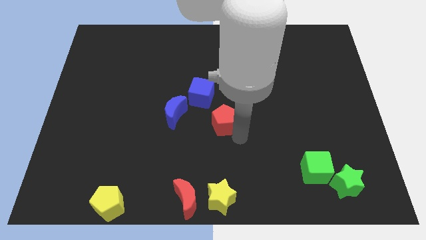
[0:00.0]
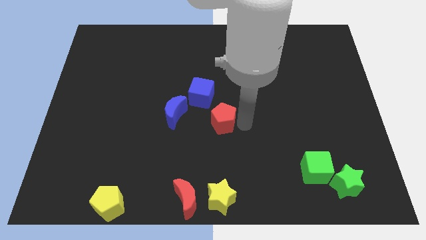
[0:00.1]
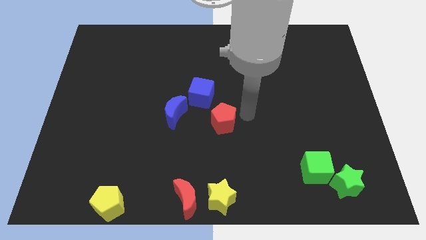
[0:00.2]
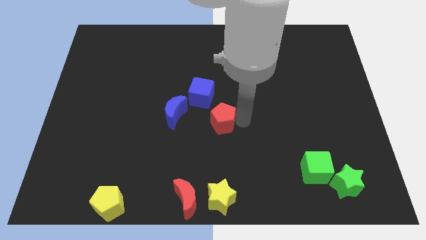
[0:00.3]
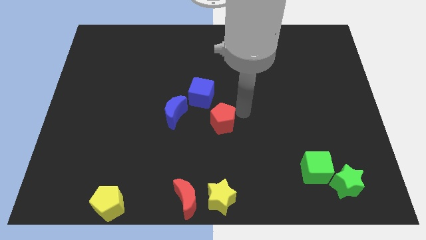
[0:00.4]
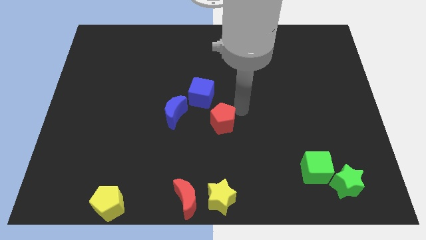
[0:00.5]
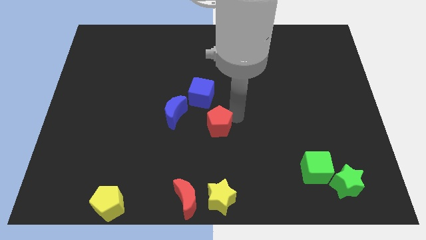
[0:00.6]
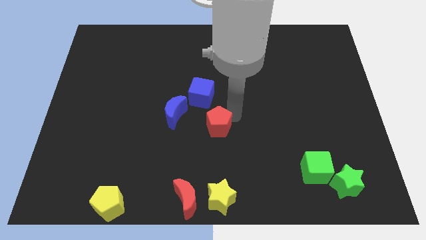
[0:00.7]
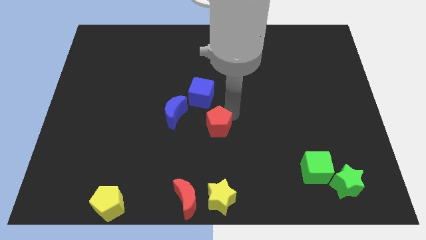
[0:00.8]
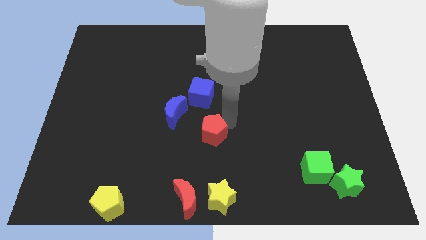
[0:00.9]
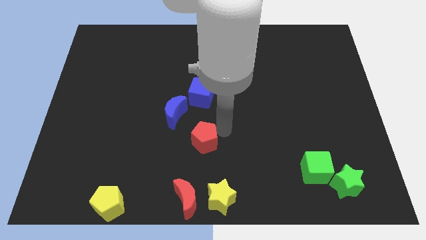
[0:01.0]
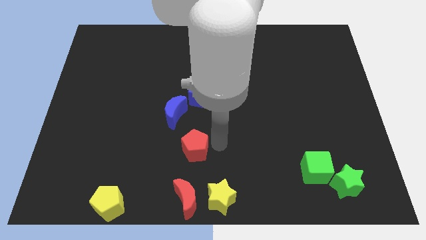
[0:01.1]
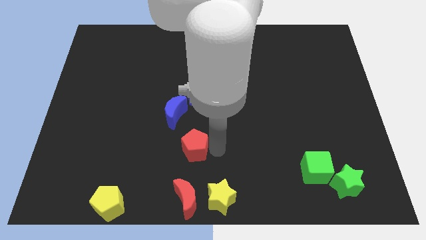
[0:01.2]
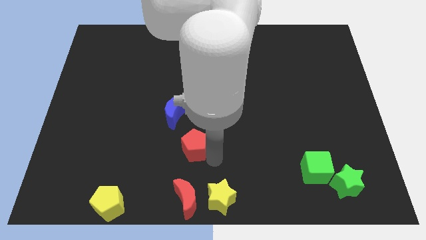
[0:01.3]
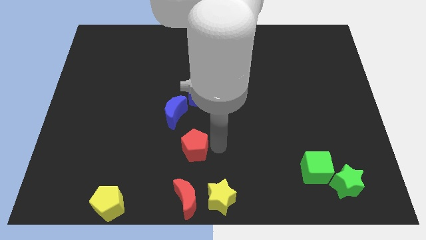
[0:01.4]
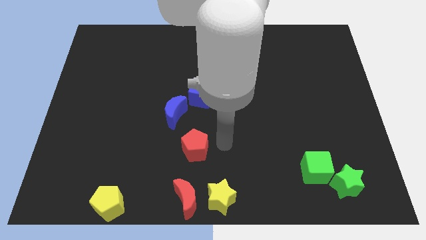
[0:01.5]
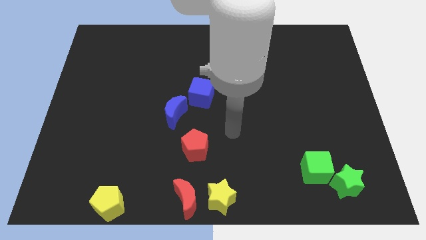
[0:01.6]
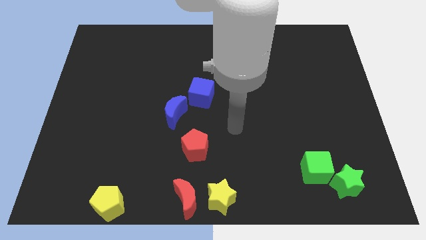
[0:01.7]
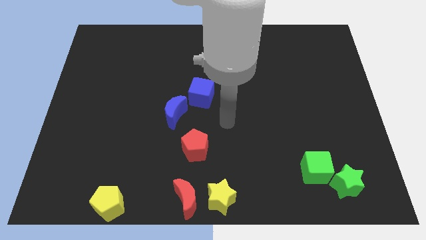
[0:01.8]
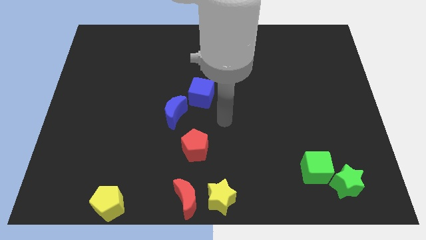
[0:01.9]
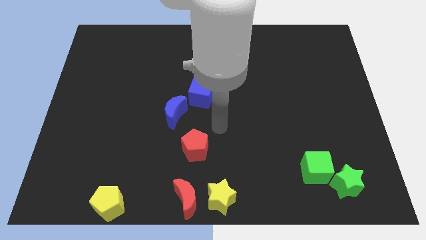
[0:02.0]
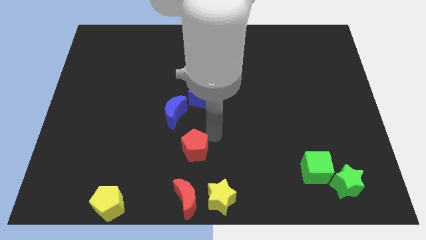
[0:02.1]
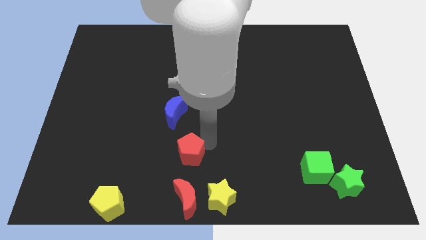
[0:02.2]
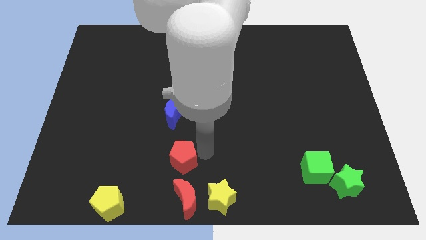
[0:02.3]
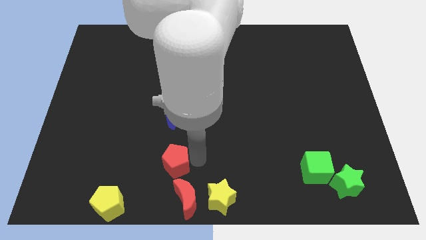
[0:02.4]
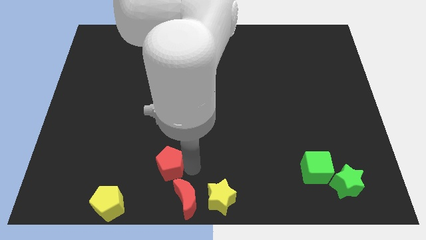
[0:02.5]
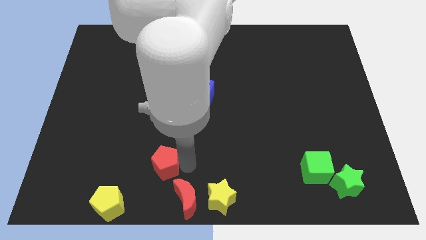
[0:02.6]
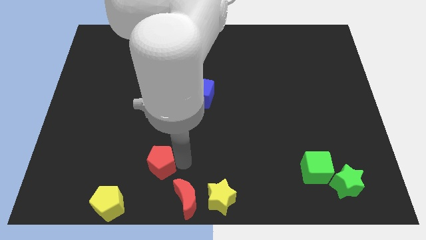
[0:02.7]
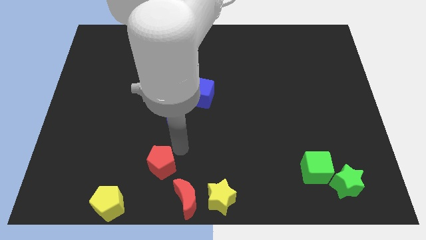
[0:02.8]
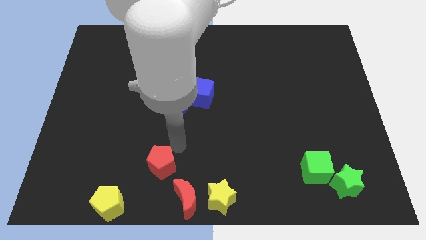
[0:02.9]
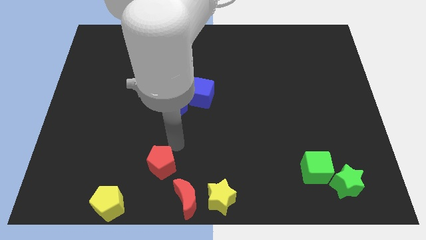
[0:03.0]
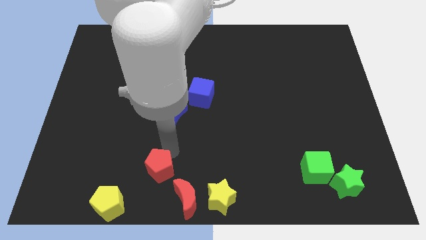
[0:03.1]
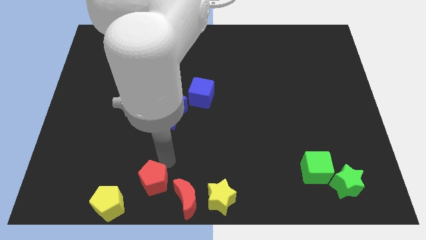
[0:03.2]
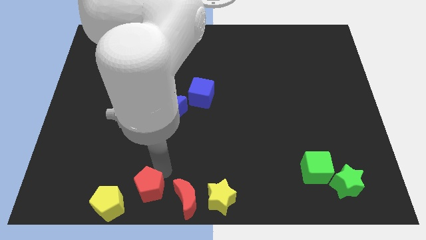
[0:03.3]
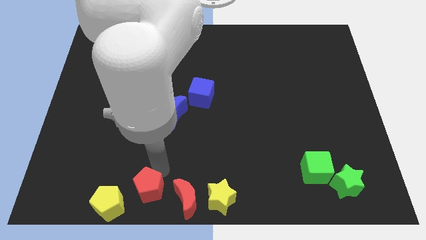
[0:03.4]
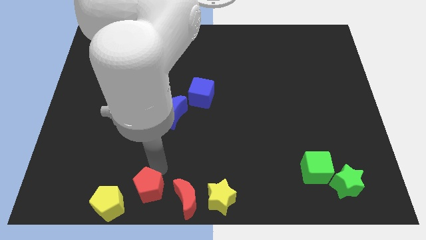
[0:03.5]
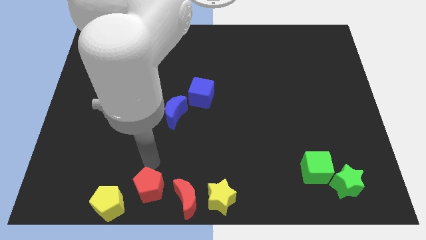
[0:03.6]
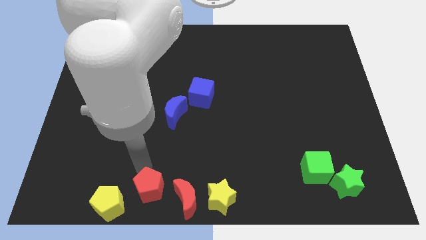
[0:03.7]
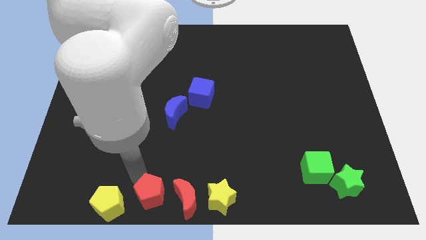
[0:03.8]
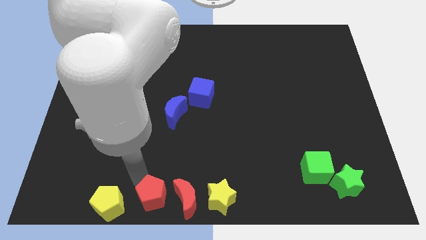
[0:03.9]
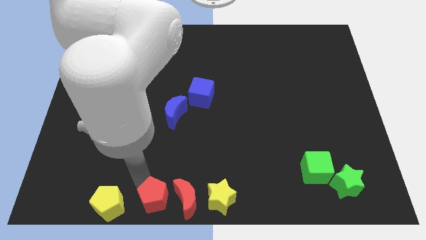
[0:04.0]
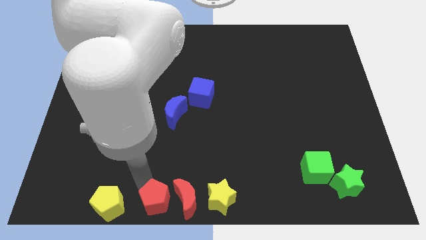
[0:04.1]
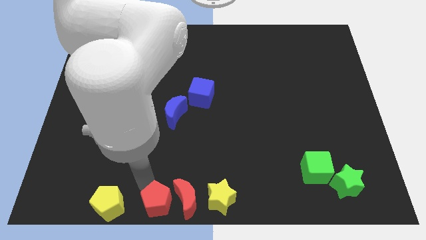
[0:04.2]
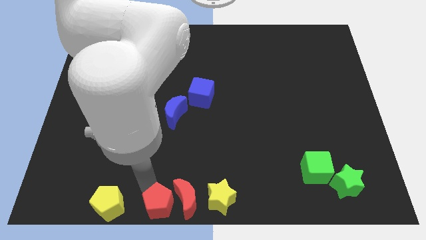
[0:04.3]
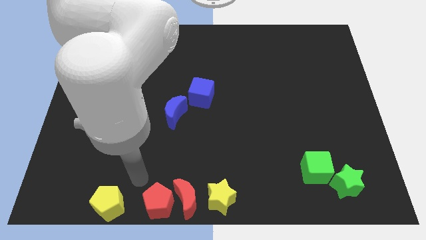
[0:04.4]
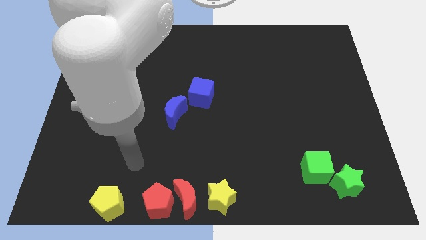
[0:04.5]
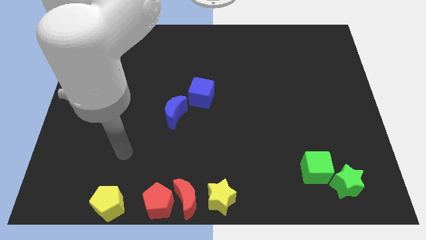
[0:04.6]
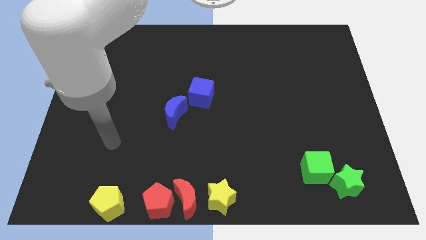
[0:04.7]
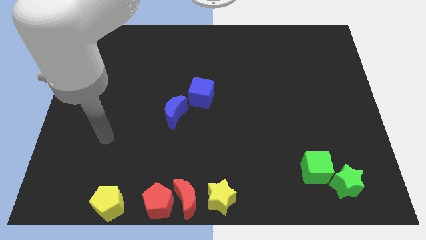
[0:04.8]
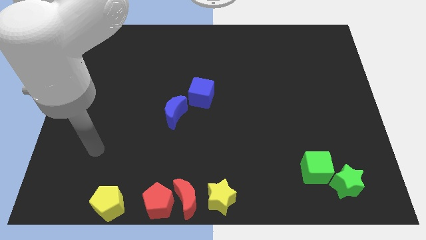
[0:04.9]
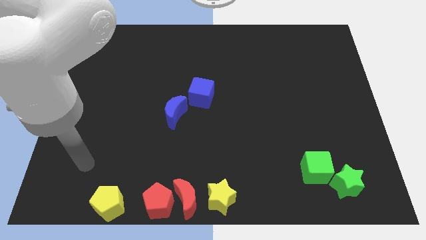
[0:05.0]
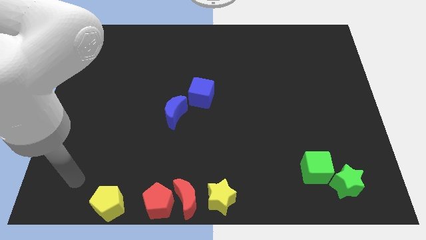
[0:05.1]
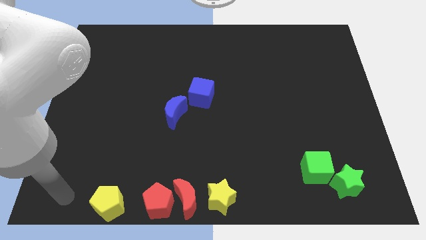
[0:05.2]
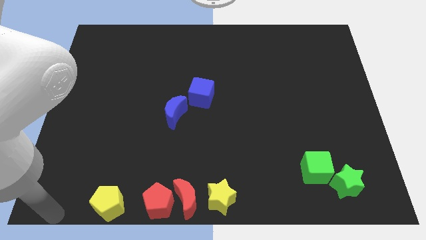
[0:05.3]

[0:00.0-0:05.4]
place the red pentagon in between the red crescent and yellow pentagon

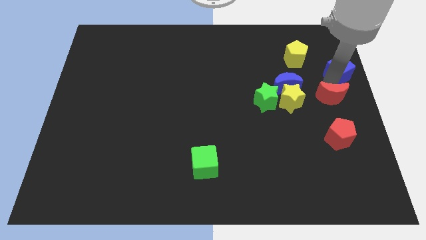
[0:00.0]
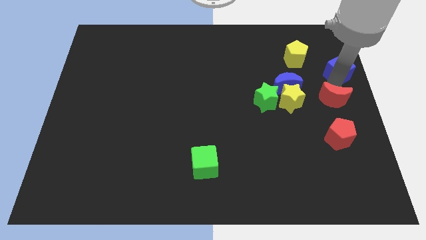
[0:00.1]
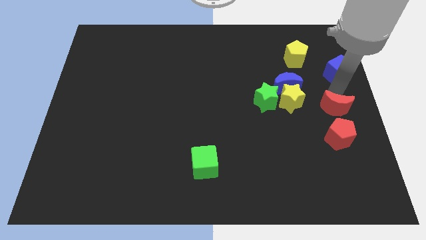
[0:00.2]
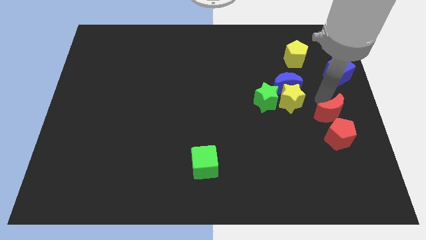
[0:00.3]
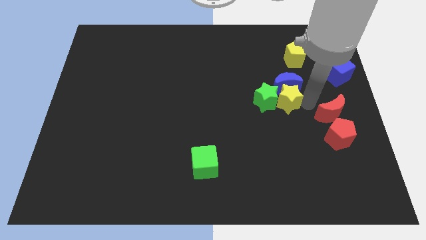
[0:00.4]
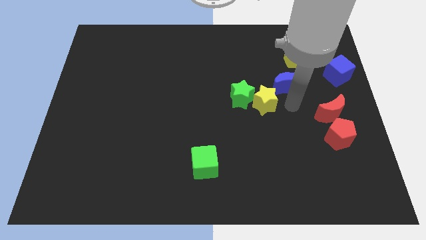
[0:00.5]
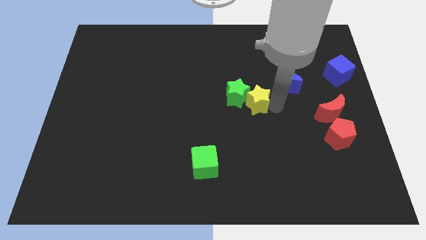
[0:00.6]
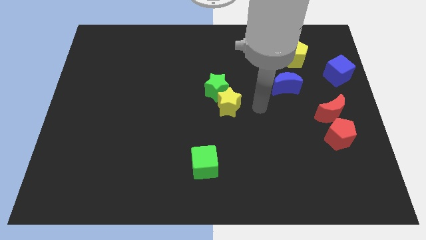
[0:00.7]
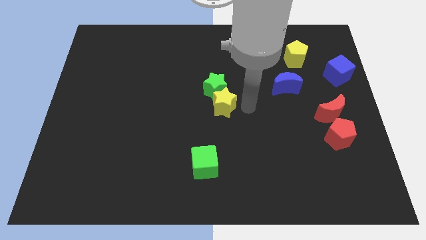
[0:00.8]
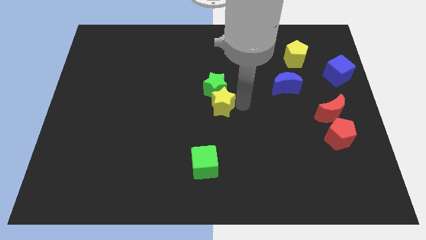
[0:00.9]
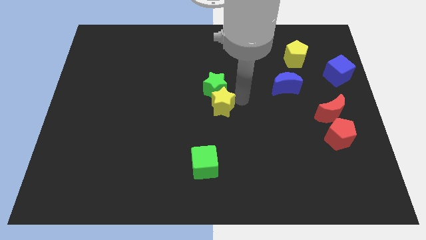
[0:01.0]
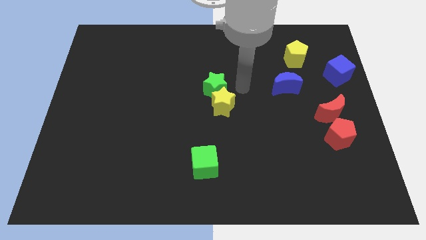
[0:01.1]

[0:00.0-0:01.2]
move the yellow star to the left

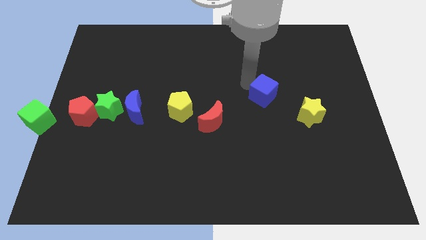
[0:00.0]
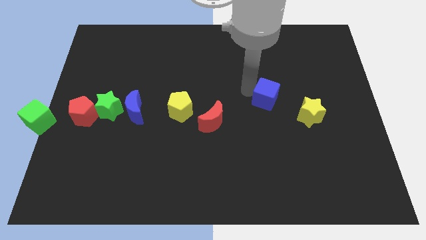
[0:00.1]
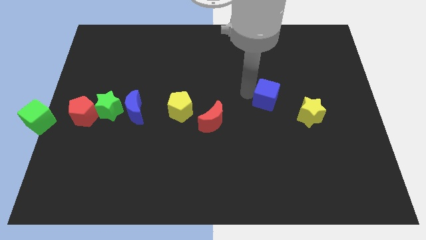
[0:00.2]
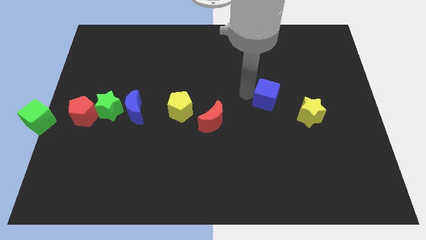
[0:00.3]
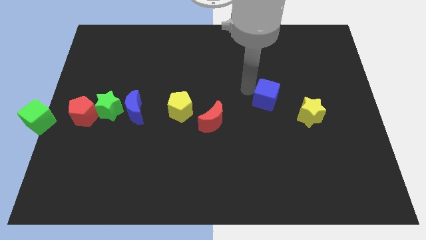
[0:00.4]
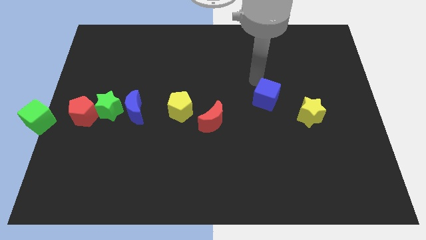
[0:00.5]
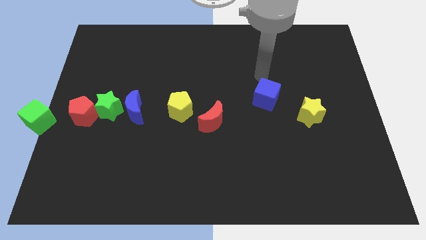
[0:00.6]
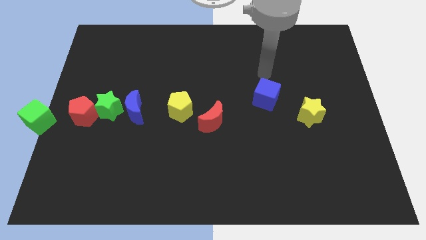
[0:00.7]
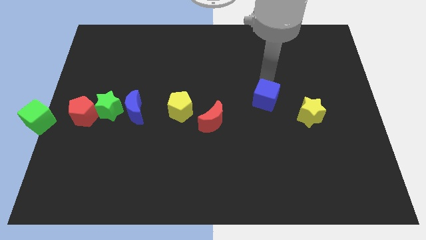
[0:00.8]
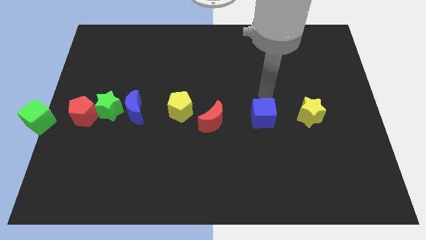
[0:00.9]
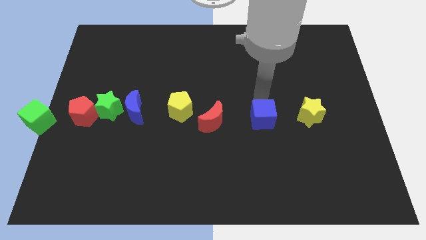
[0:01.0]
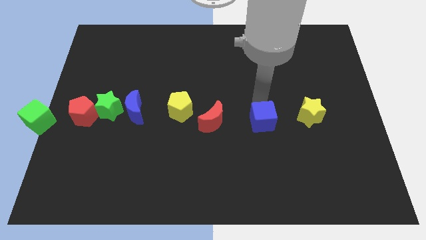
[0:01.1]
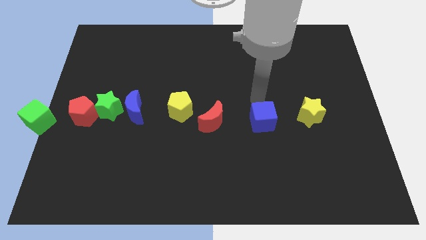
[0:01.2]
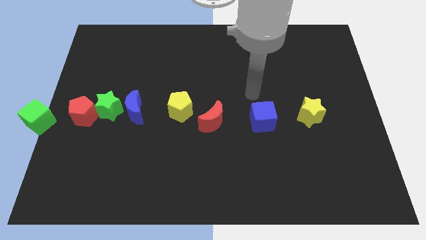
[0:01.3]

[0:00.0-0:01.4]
move the blue cube to the left of the yellow star

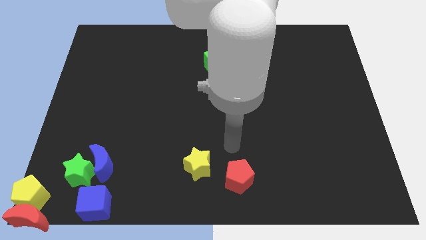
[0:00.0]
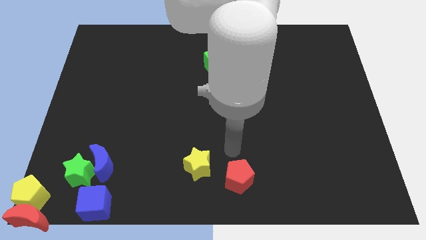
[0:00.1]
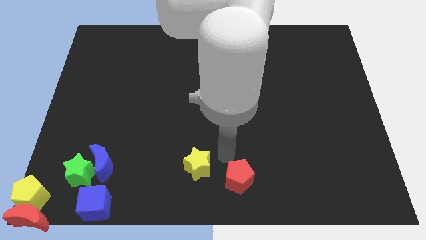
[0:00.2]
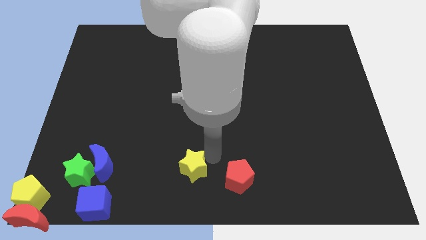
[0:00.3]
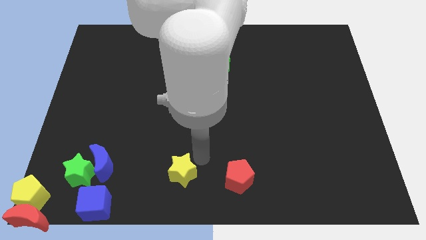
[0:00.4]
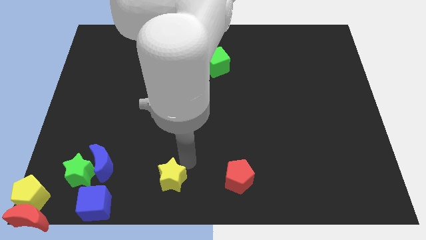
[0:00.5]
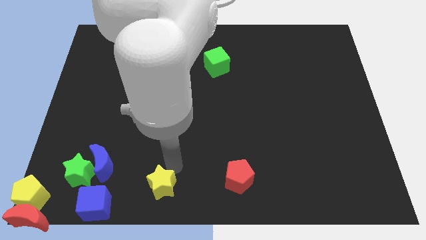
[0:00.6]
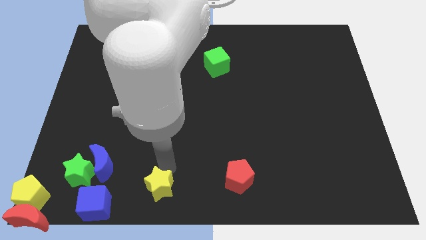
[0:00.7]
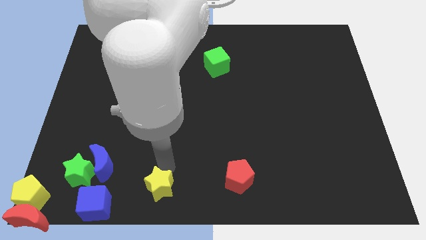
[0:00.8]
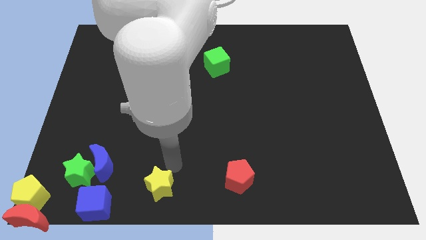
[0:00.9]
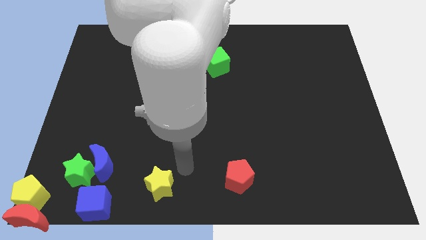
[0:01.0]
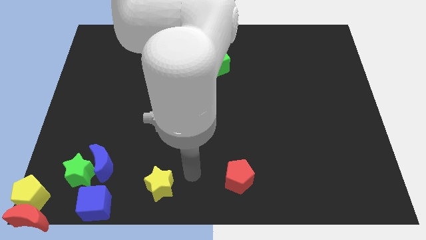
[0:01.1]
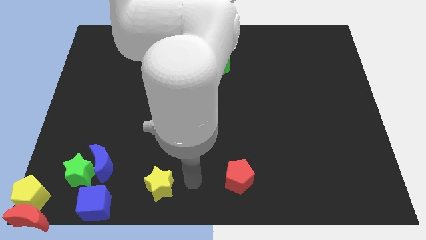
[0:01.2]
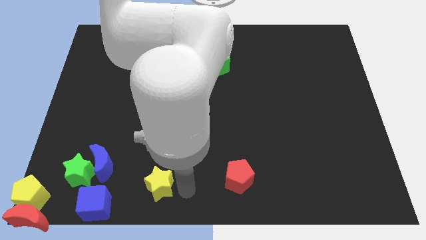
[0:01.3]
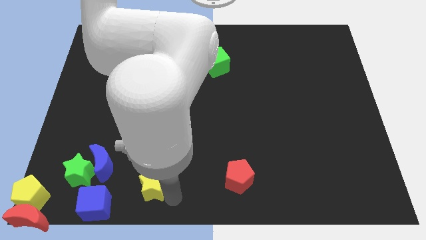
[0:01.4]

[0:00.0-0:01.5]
push the yellow star towards the blue blocks
